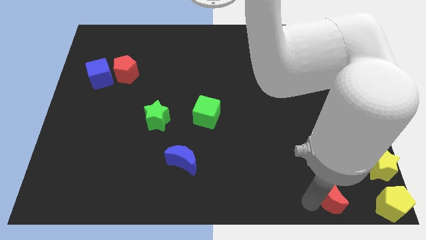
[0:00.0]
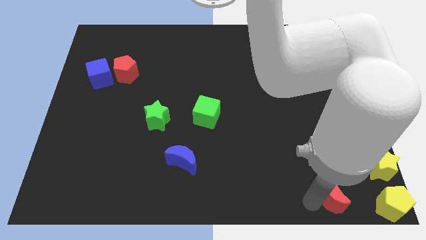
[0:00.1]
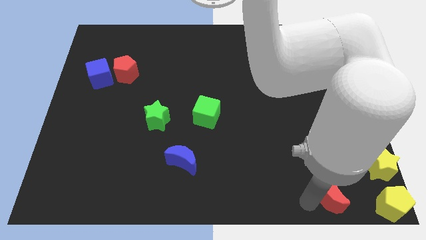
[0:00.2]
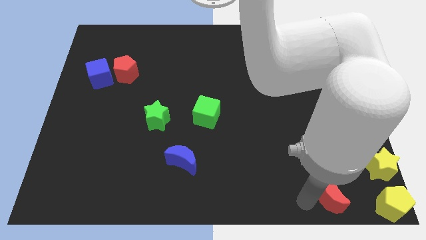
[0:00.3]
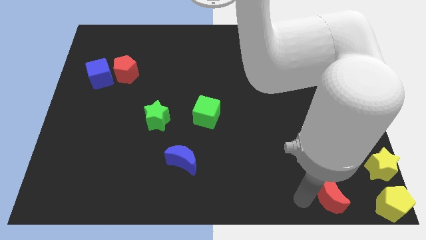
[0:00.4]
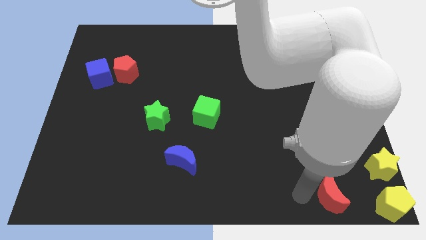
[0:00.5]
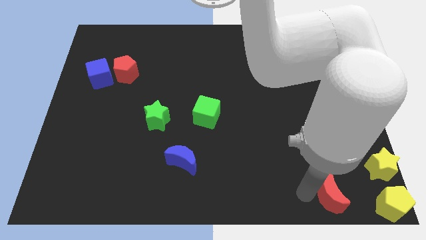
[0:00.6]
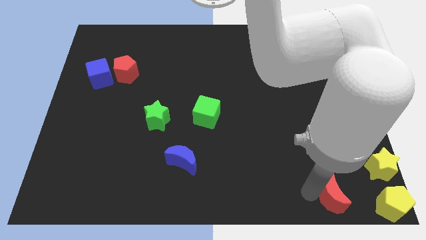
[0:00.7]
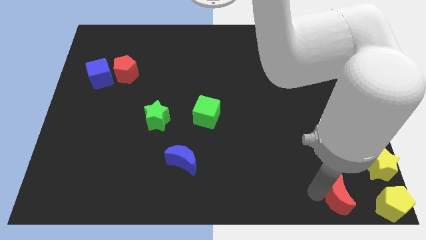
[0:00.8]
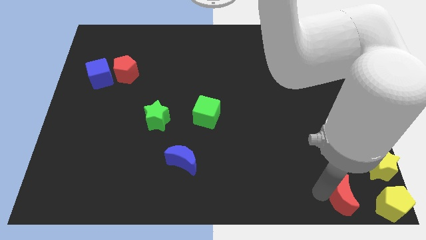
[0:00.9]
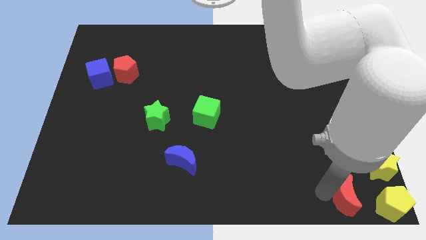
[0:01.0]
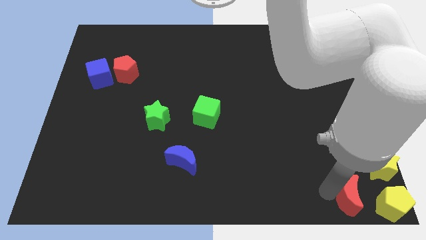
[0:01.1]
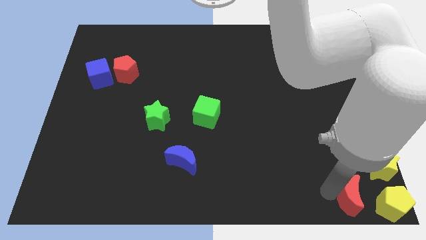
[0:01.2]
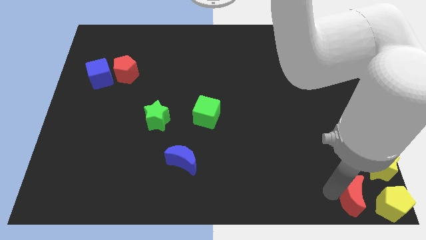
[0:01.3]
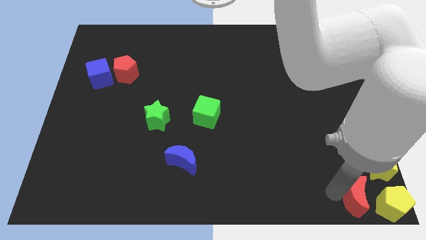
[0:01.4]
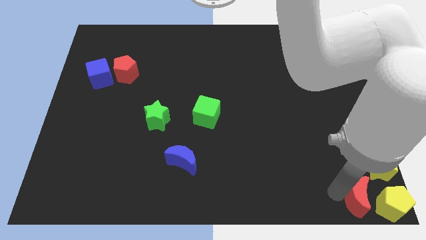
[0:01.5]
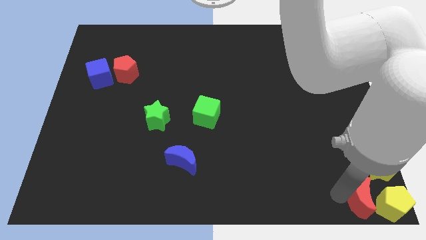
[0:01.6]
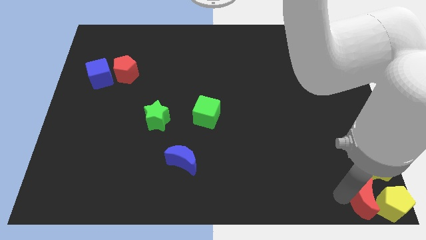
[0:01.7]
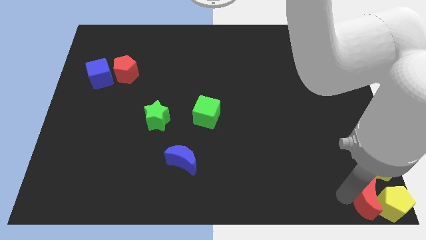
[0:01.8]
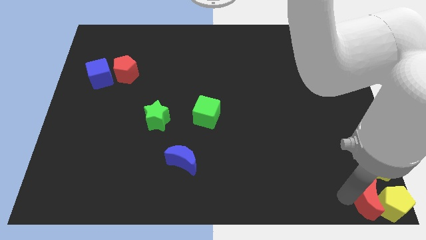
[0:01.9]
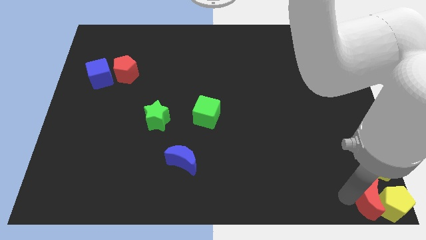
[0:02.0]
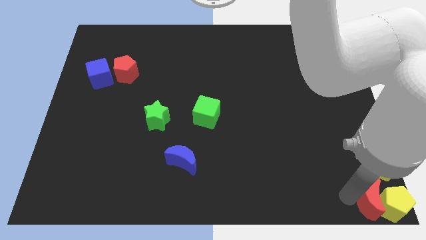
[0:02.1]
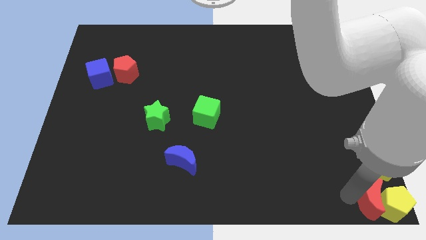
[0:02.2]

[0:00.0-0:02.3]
place red moon close to yellow pentagon

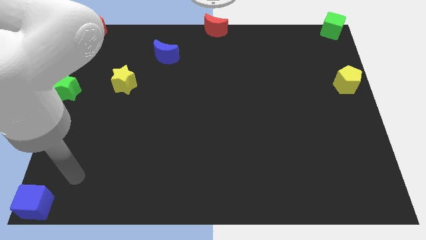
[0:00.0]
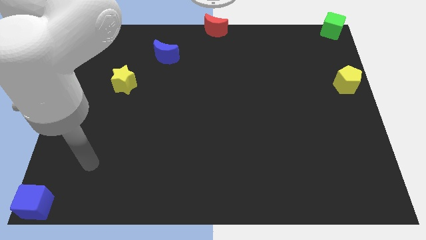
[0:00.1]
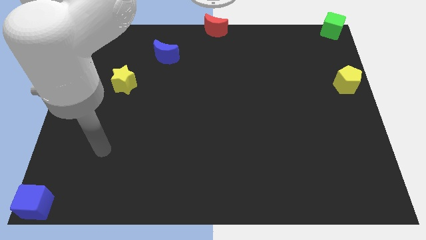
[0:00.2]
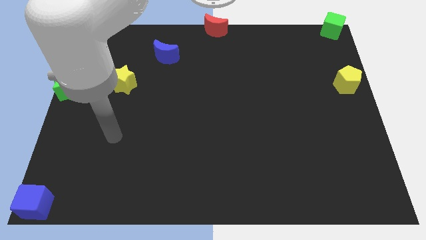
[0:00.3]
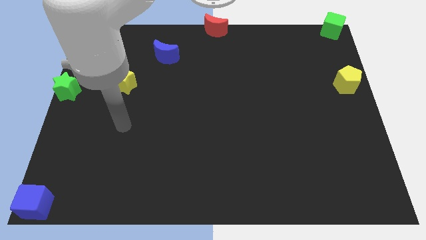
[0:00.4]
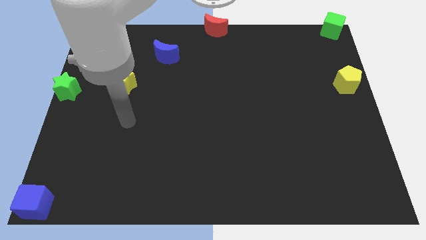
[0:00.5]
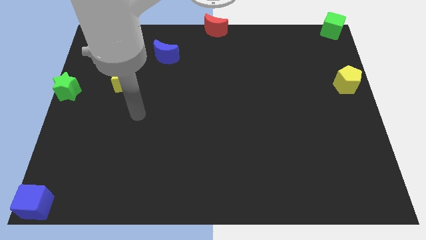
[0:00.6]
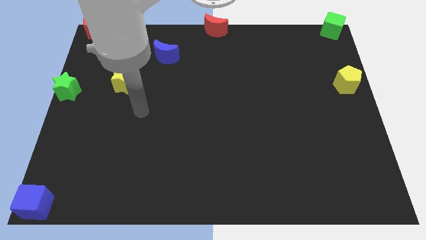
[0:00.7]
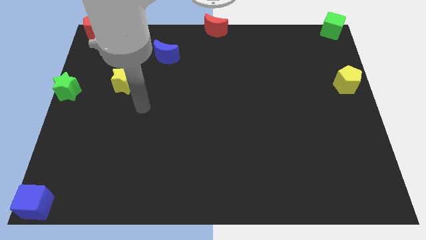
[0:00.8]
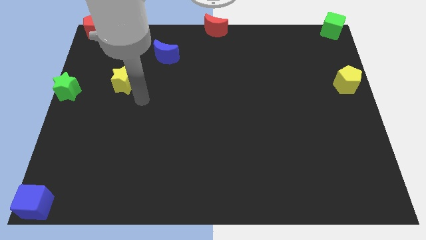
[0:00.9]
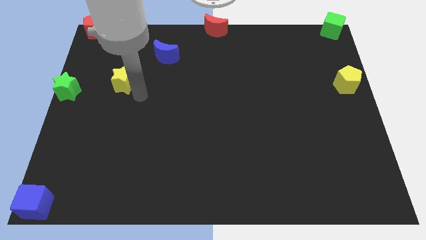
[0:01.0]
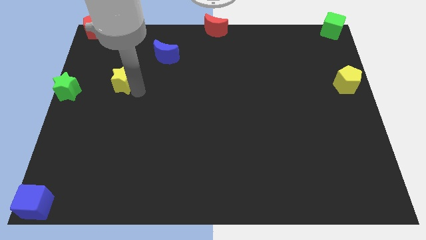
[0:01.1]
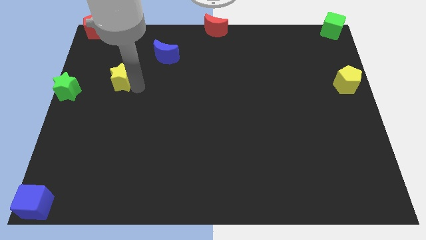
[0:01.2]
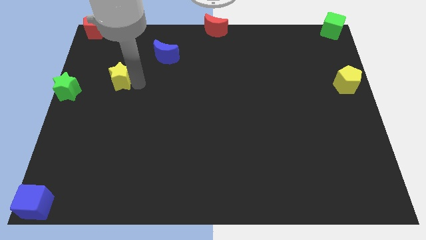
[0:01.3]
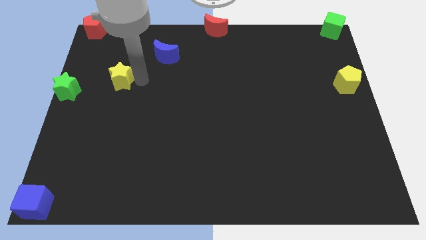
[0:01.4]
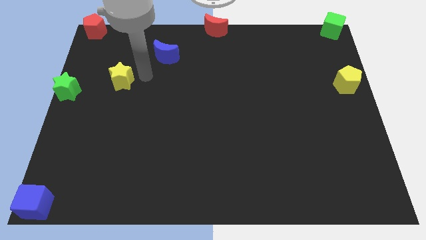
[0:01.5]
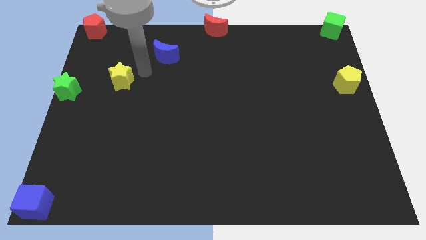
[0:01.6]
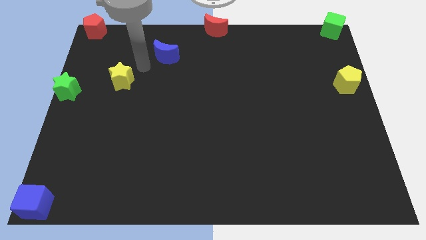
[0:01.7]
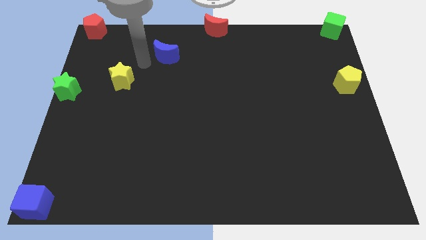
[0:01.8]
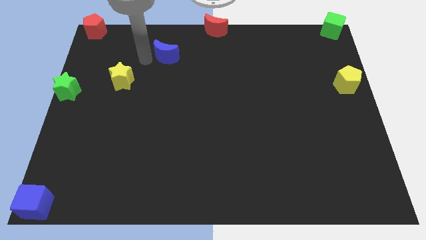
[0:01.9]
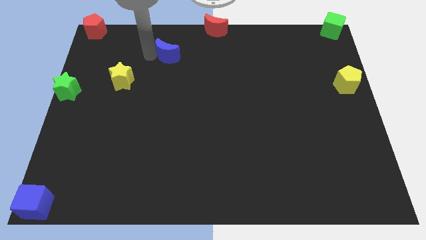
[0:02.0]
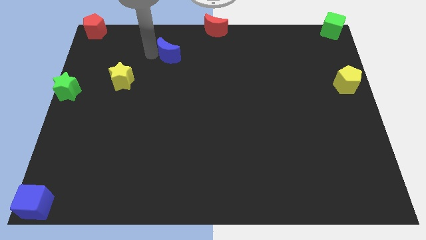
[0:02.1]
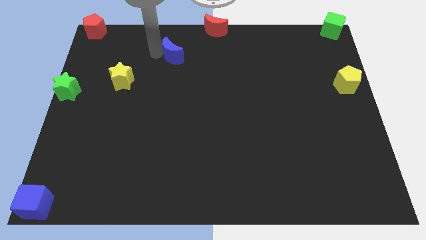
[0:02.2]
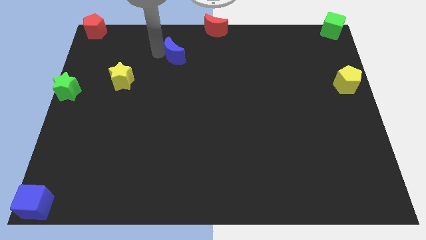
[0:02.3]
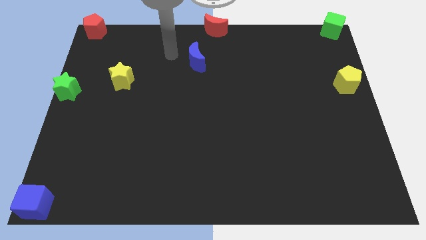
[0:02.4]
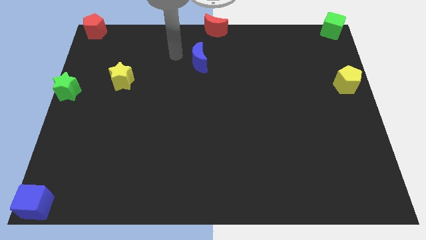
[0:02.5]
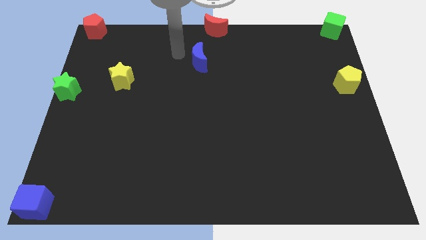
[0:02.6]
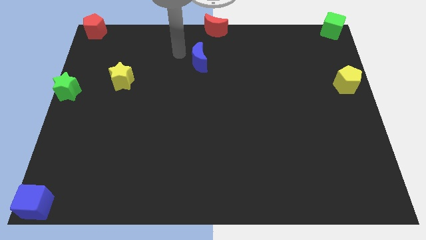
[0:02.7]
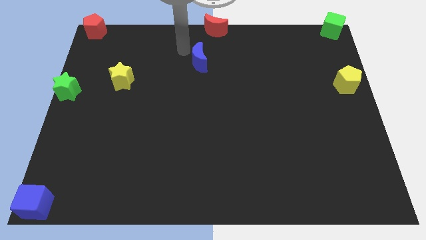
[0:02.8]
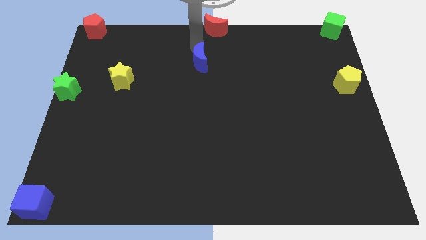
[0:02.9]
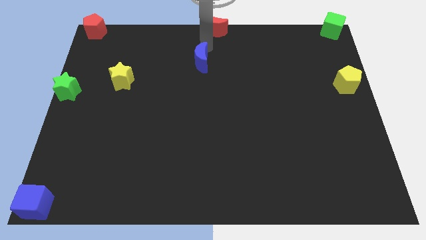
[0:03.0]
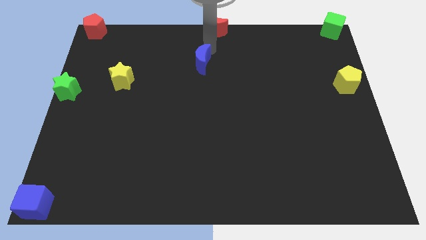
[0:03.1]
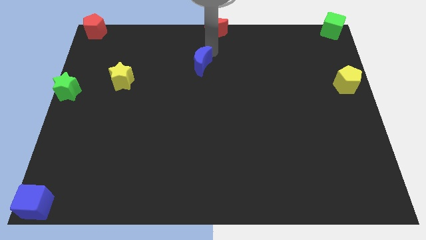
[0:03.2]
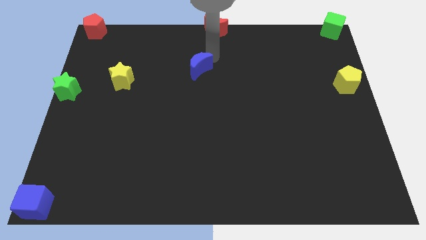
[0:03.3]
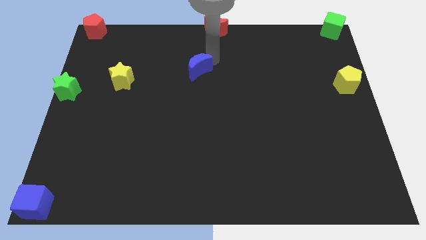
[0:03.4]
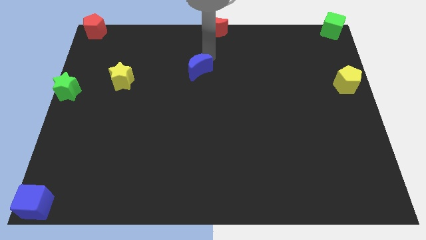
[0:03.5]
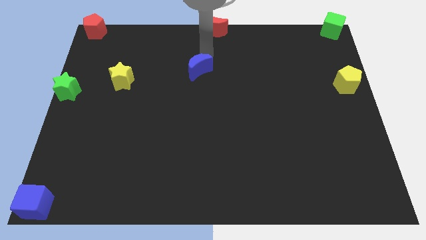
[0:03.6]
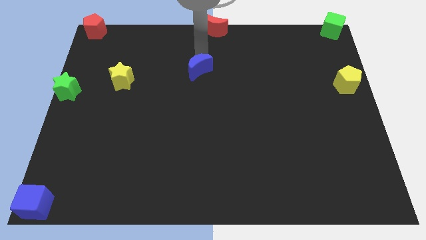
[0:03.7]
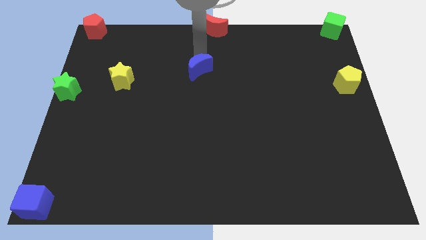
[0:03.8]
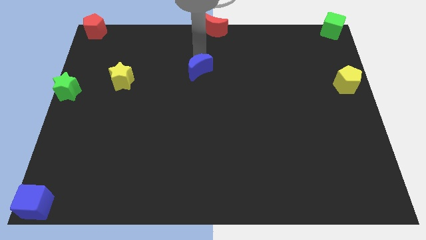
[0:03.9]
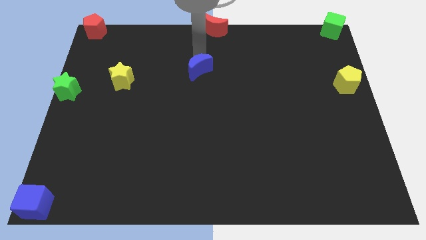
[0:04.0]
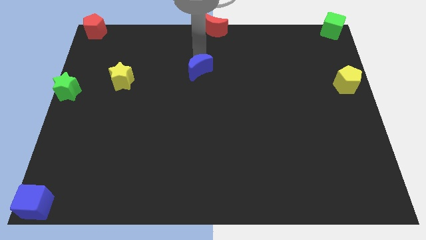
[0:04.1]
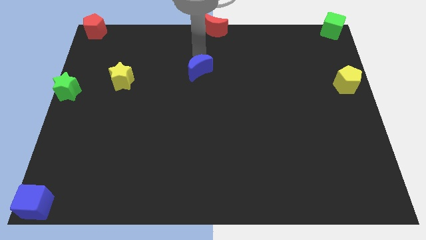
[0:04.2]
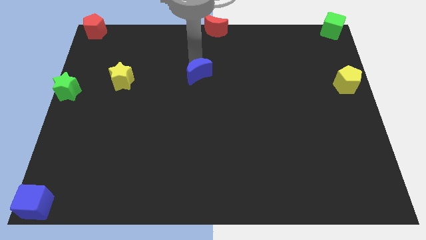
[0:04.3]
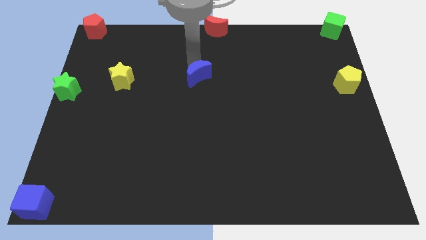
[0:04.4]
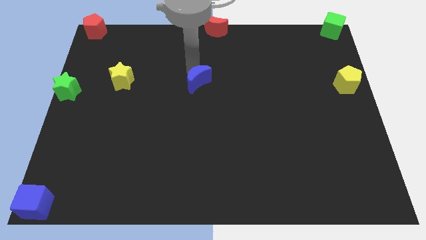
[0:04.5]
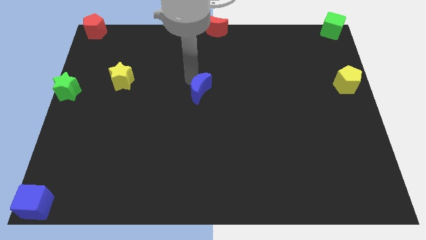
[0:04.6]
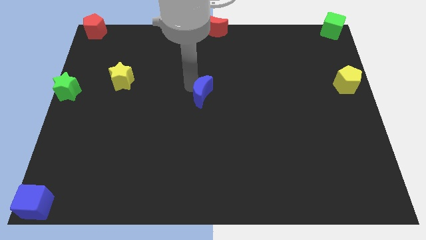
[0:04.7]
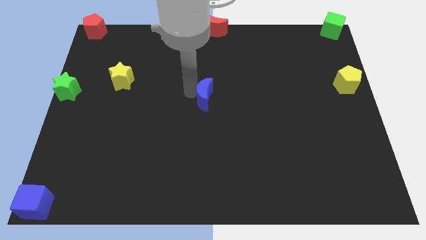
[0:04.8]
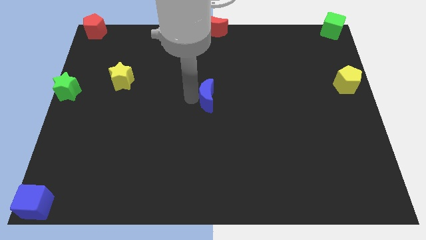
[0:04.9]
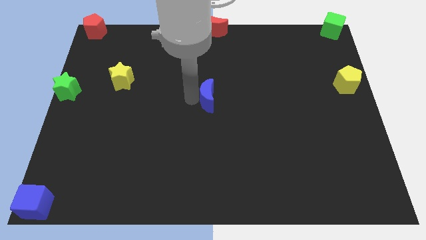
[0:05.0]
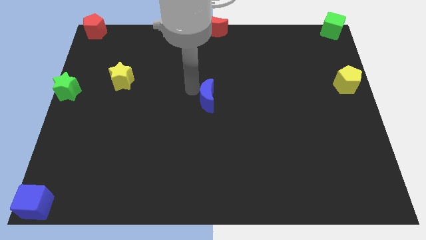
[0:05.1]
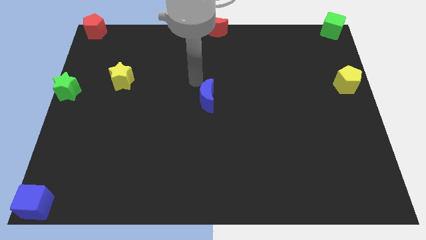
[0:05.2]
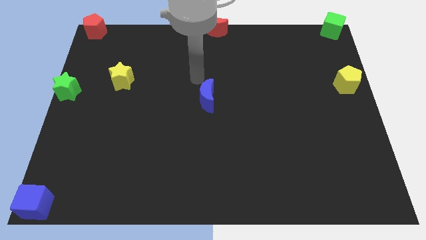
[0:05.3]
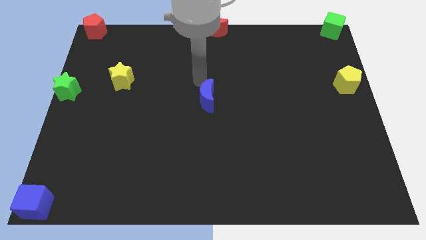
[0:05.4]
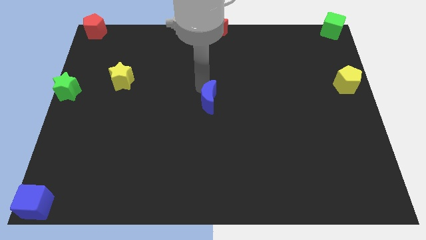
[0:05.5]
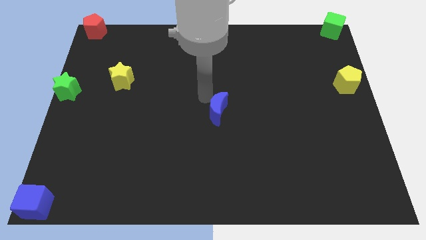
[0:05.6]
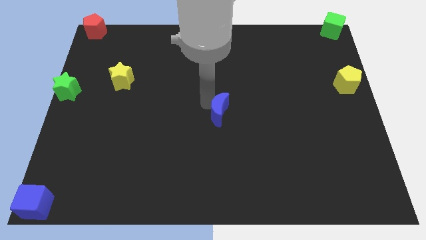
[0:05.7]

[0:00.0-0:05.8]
push the blue crescent at the center of the board

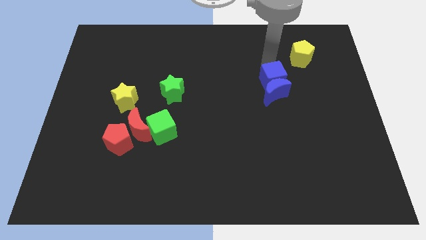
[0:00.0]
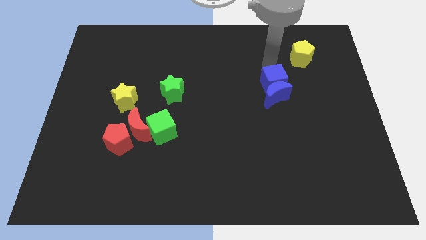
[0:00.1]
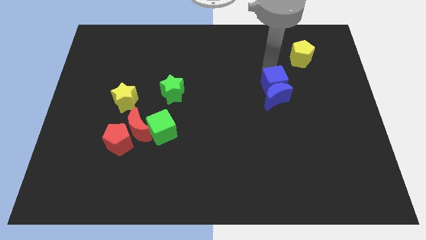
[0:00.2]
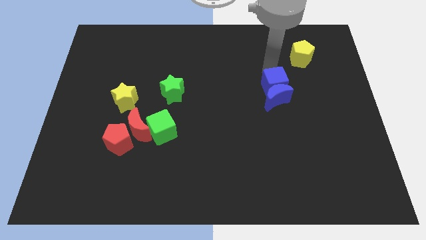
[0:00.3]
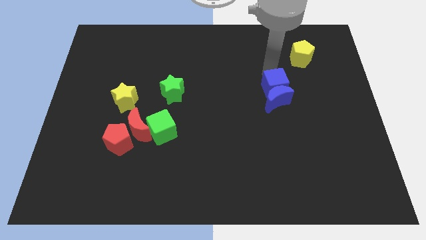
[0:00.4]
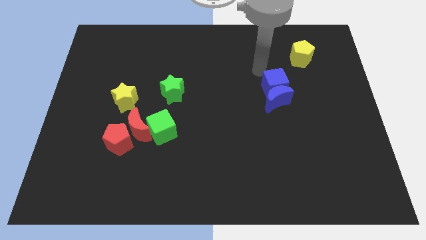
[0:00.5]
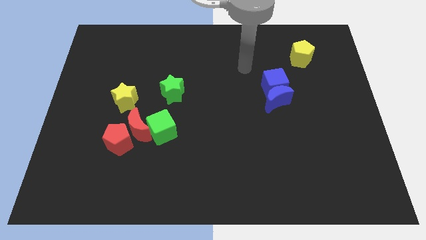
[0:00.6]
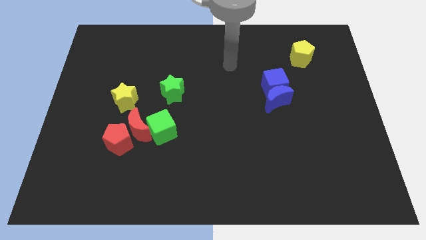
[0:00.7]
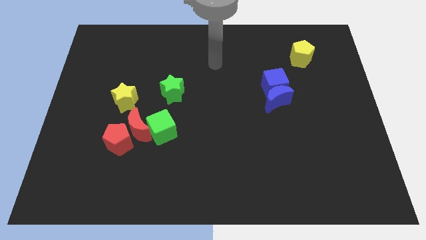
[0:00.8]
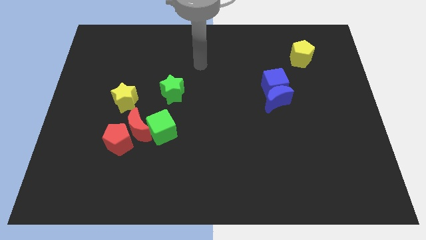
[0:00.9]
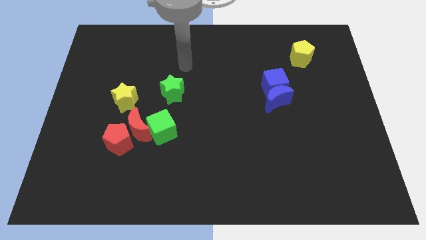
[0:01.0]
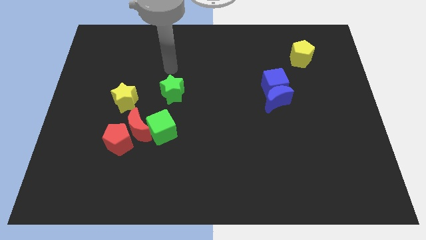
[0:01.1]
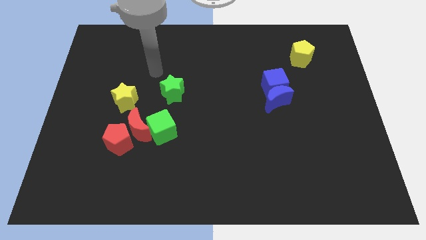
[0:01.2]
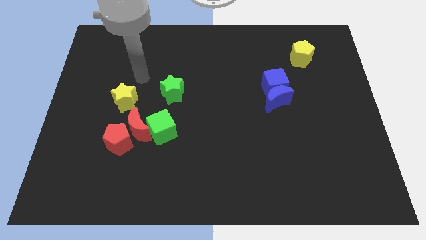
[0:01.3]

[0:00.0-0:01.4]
drag the pointer away from the blue blocks
